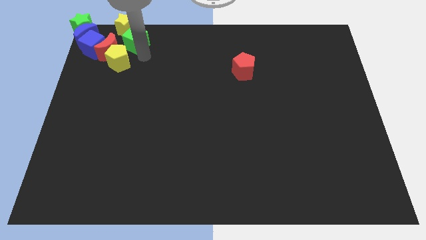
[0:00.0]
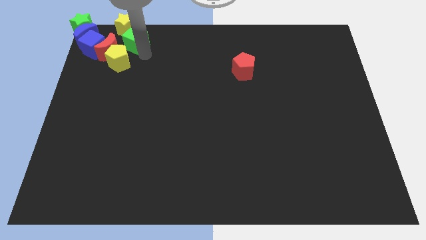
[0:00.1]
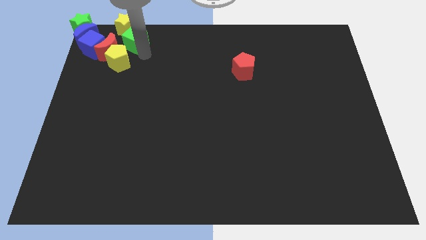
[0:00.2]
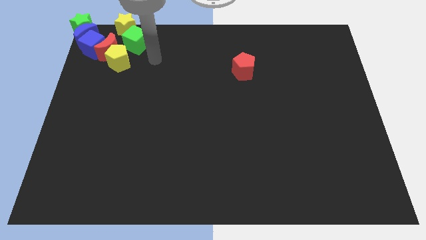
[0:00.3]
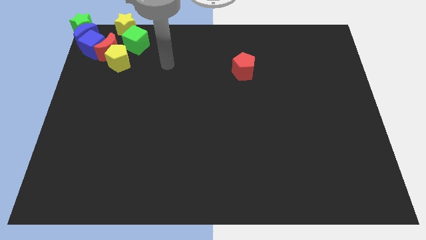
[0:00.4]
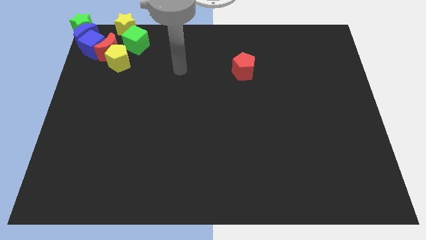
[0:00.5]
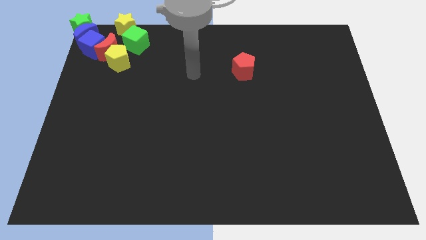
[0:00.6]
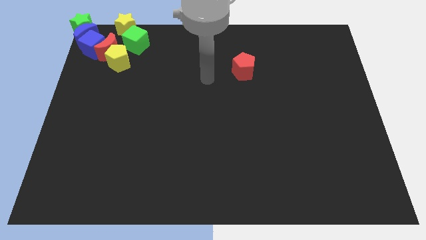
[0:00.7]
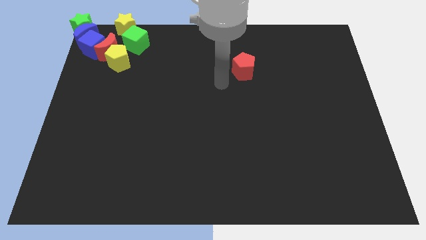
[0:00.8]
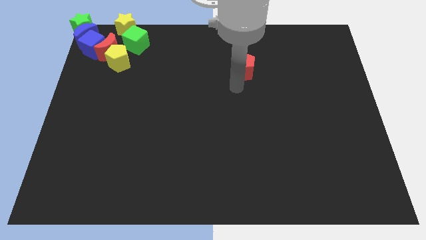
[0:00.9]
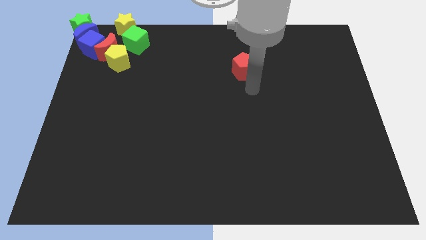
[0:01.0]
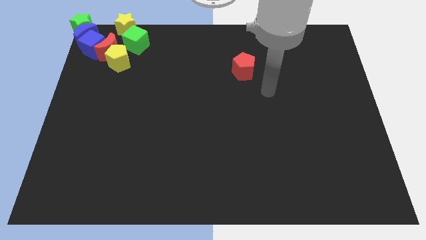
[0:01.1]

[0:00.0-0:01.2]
go away from the green cube

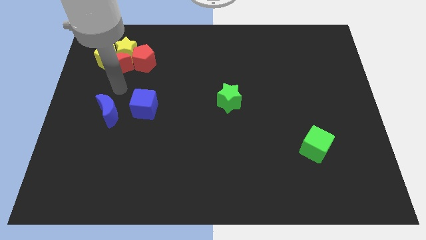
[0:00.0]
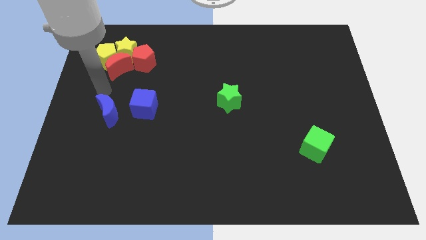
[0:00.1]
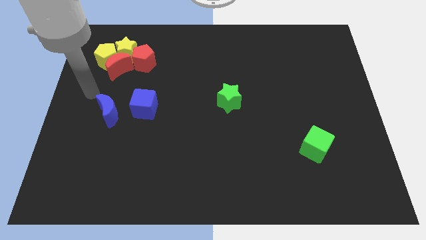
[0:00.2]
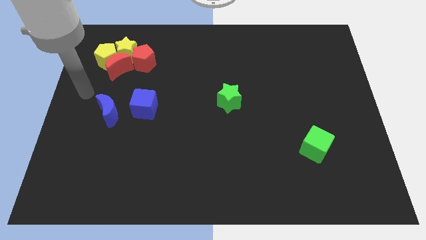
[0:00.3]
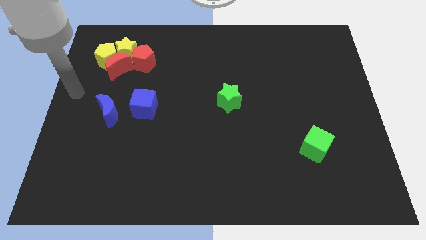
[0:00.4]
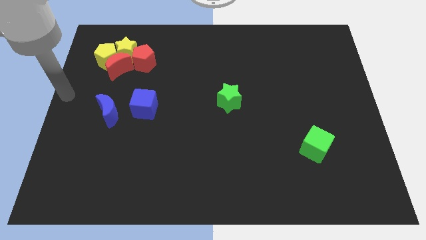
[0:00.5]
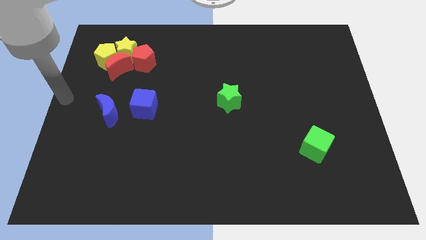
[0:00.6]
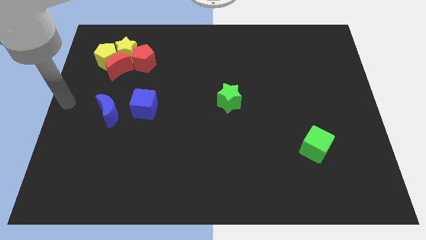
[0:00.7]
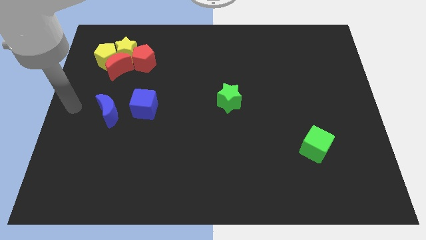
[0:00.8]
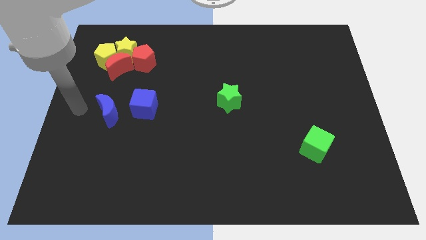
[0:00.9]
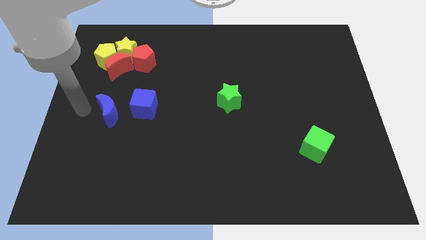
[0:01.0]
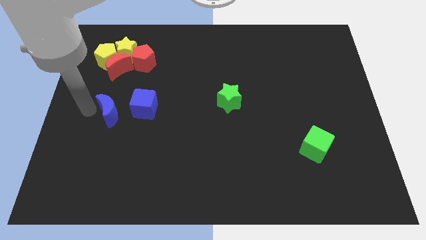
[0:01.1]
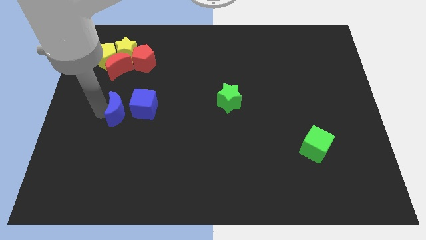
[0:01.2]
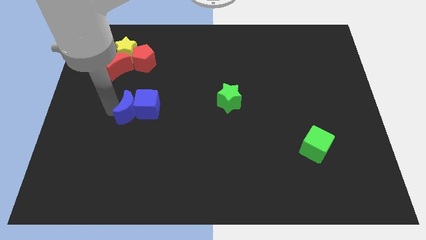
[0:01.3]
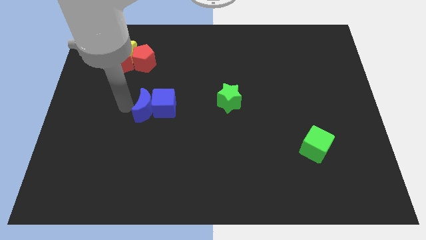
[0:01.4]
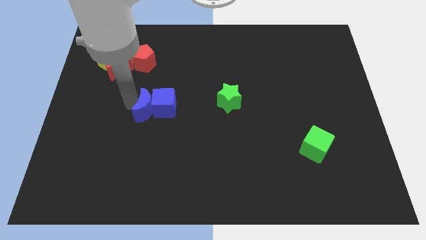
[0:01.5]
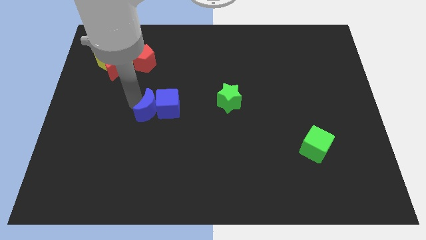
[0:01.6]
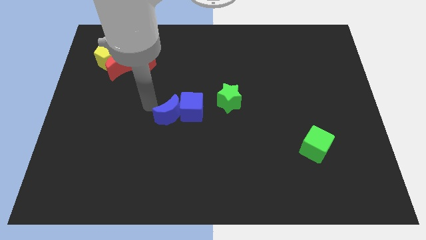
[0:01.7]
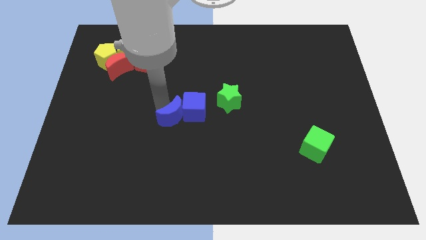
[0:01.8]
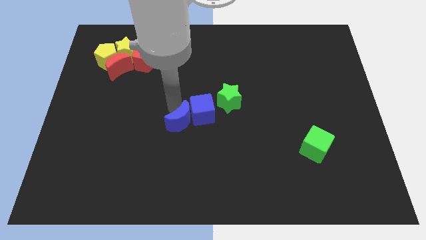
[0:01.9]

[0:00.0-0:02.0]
move the blue moon into the blue cube

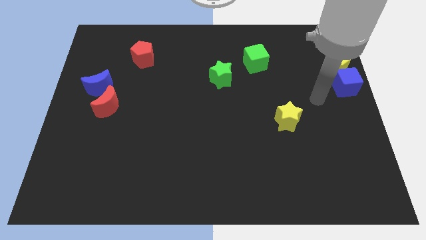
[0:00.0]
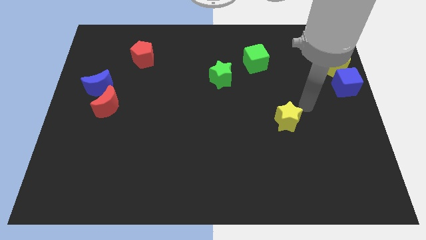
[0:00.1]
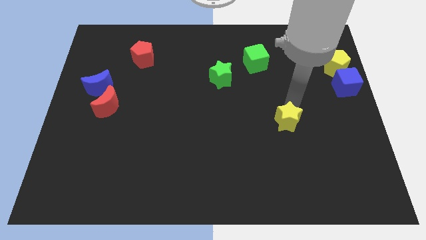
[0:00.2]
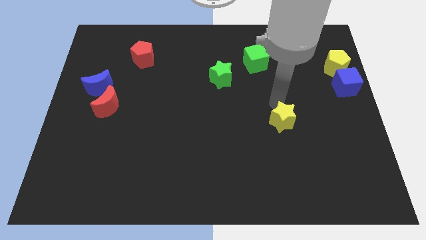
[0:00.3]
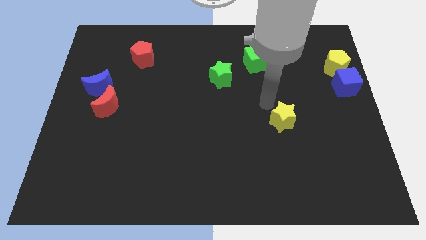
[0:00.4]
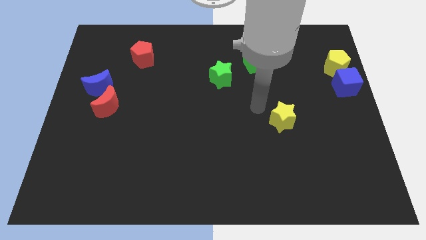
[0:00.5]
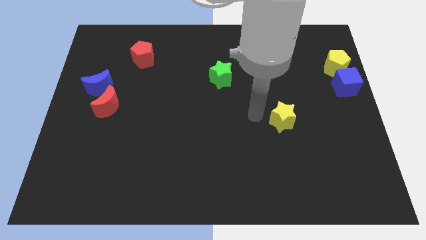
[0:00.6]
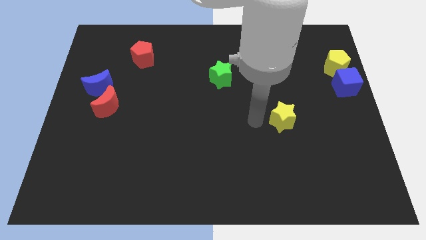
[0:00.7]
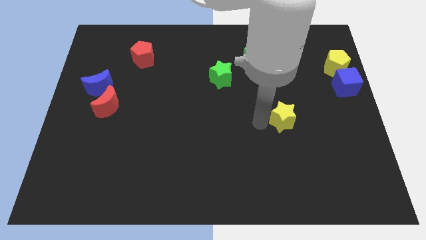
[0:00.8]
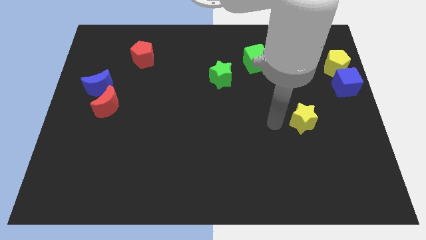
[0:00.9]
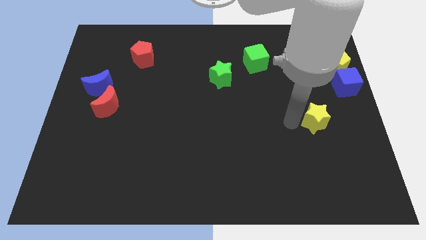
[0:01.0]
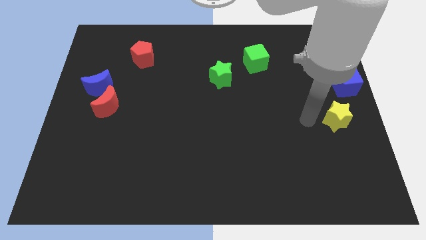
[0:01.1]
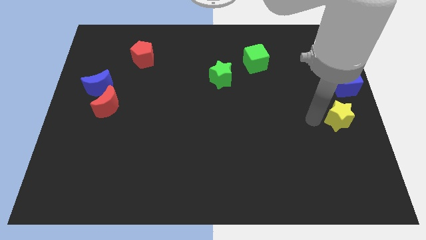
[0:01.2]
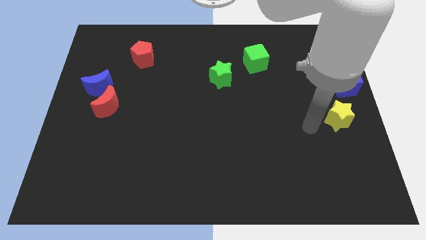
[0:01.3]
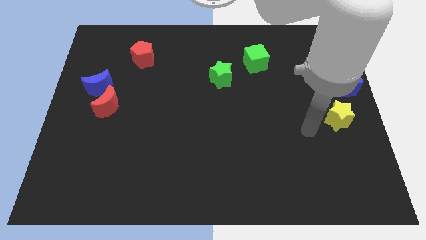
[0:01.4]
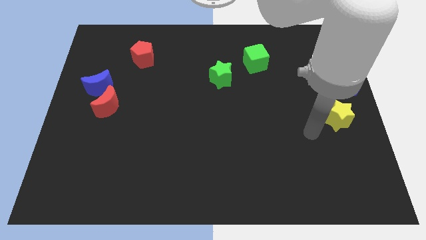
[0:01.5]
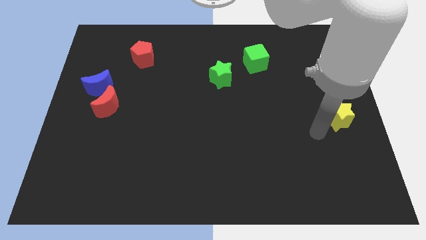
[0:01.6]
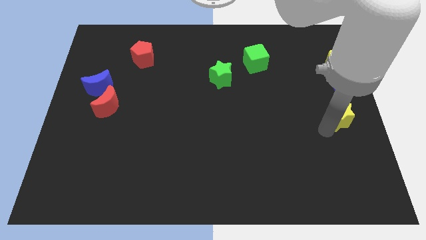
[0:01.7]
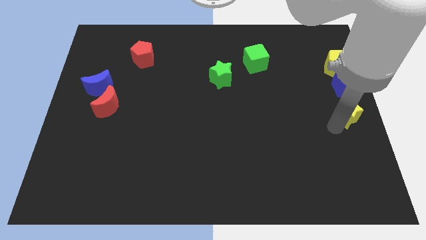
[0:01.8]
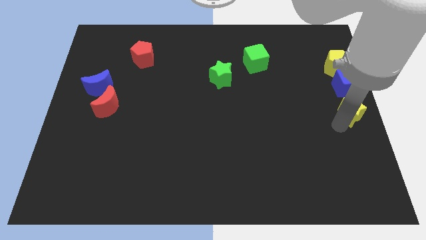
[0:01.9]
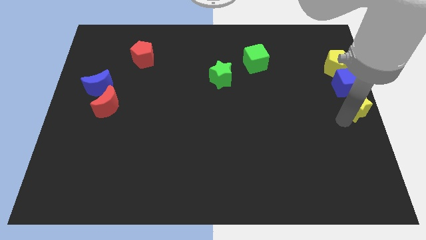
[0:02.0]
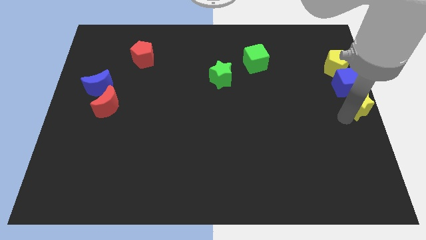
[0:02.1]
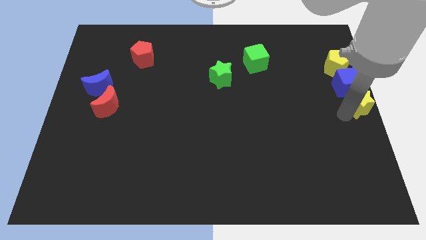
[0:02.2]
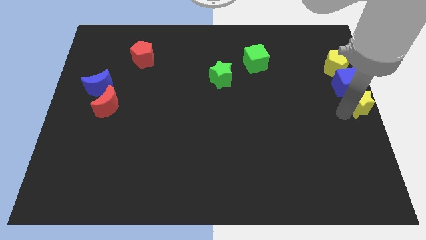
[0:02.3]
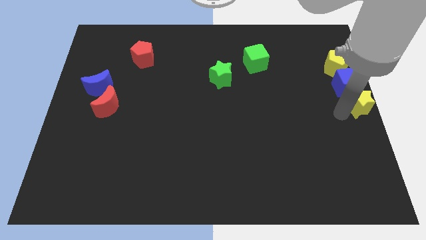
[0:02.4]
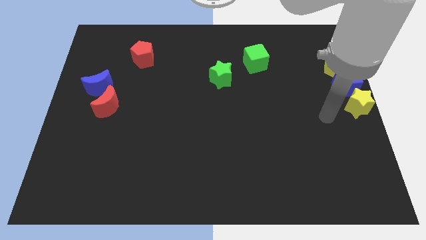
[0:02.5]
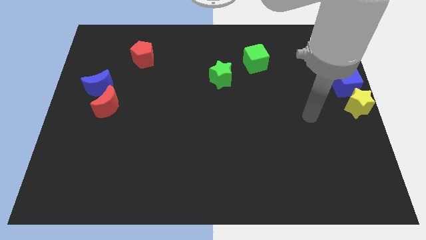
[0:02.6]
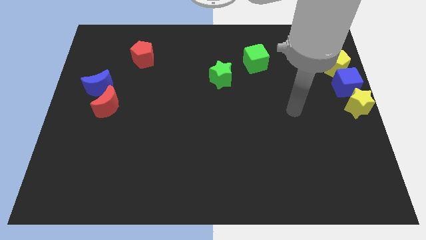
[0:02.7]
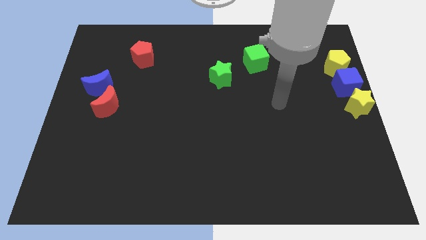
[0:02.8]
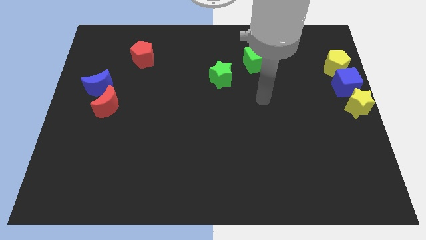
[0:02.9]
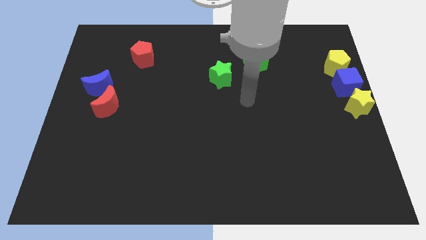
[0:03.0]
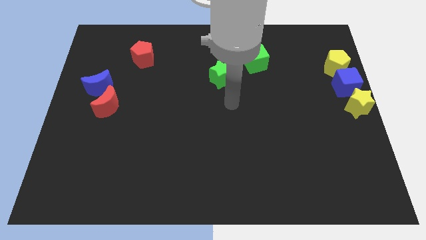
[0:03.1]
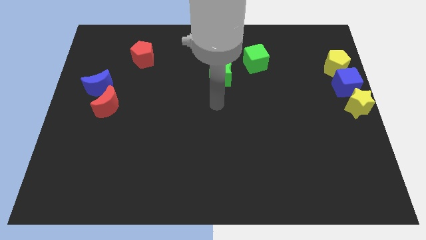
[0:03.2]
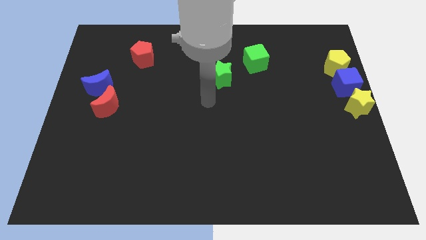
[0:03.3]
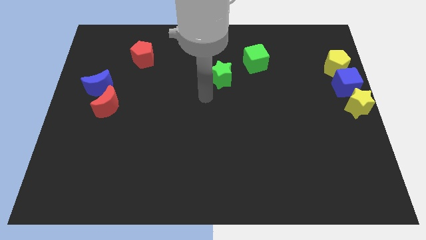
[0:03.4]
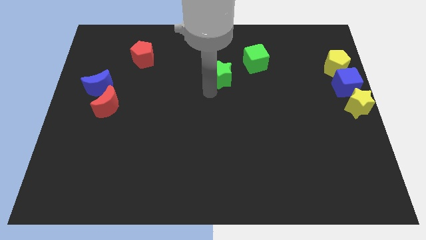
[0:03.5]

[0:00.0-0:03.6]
move the yellow star below the blue cube

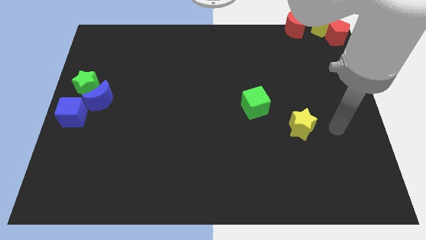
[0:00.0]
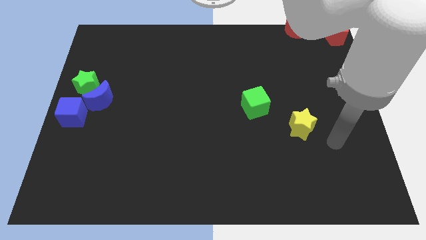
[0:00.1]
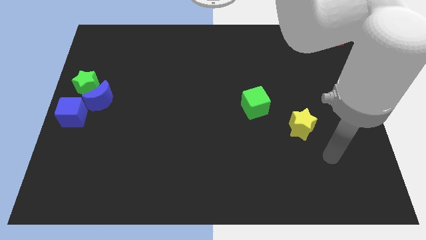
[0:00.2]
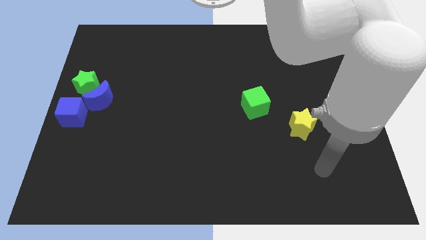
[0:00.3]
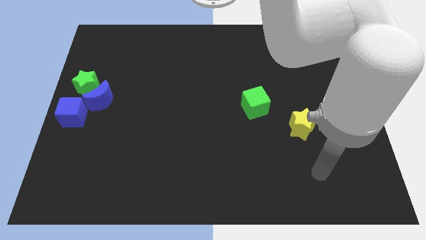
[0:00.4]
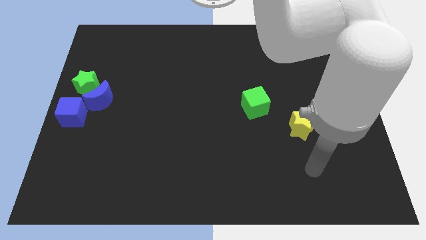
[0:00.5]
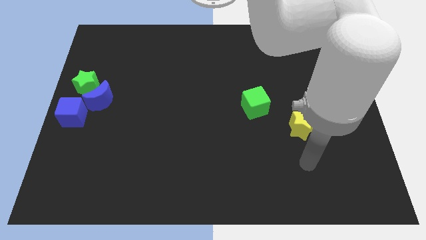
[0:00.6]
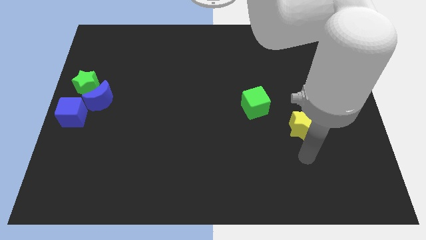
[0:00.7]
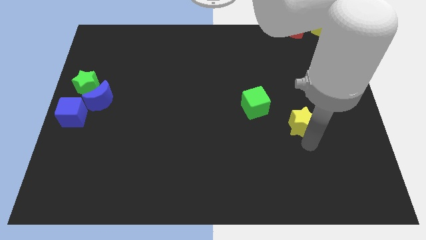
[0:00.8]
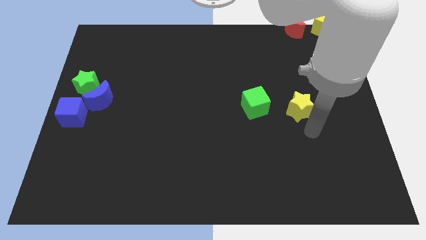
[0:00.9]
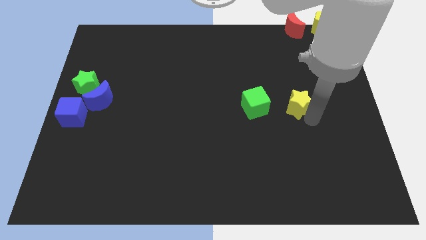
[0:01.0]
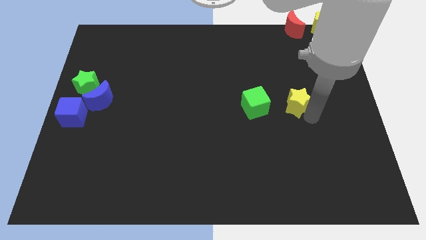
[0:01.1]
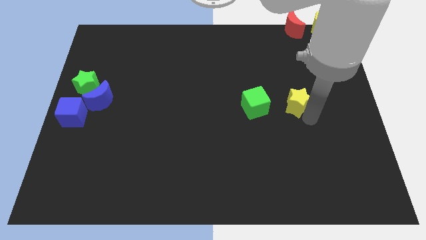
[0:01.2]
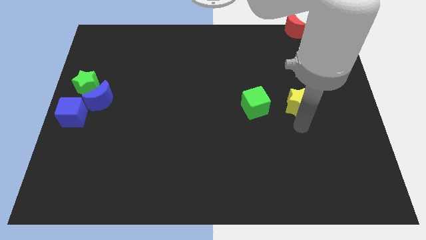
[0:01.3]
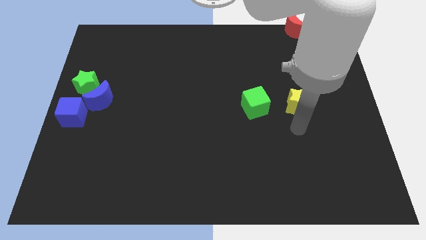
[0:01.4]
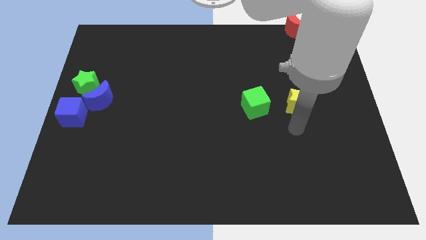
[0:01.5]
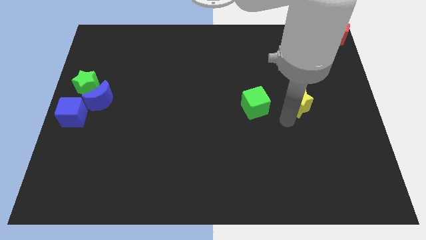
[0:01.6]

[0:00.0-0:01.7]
move the yellow star to the right of the green cube

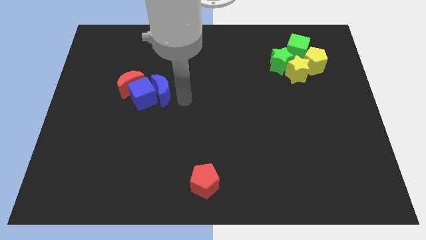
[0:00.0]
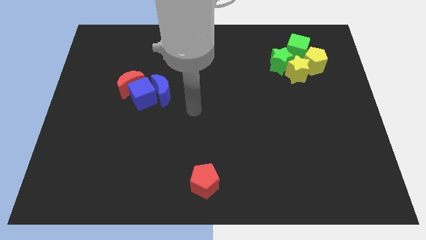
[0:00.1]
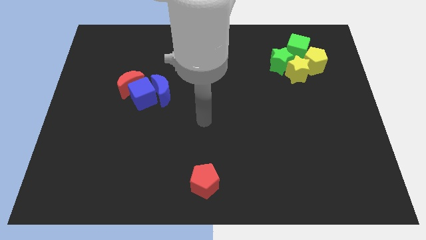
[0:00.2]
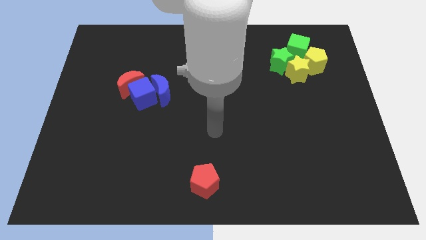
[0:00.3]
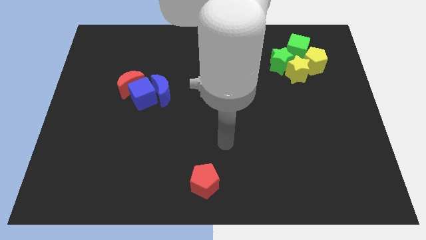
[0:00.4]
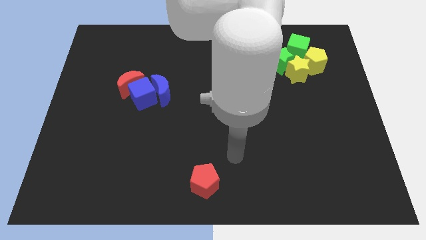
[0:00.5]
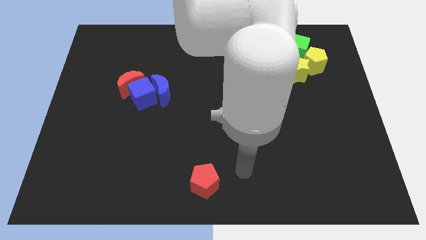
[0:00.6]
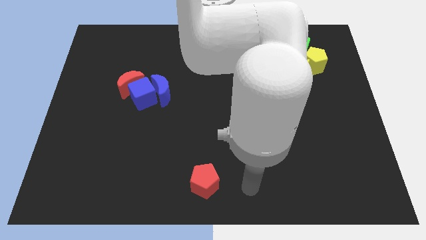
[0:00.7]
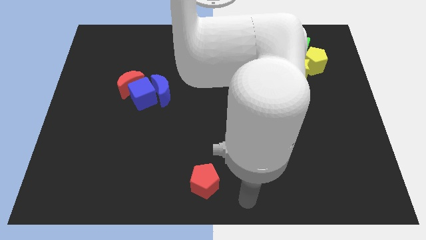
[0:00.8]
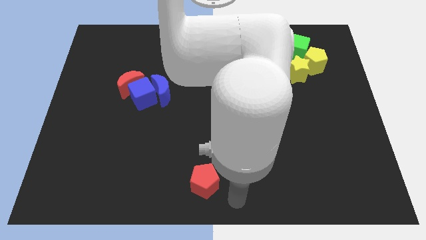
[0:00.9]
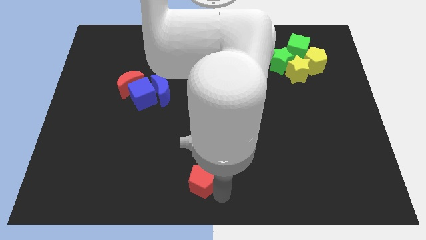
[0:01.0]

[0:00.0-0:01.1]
point the arm to the right bottom of the red pentagon
